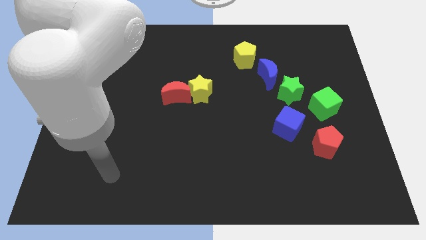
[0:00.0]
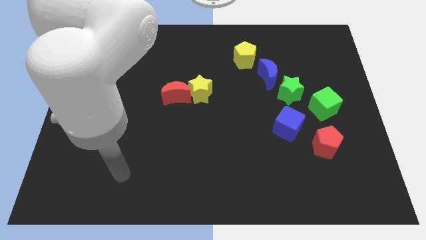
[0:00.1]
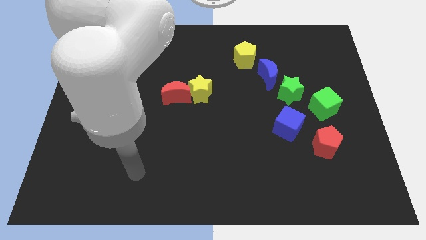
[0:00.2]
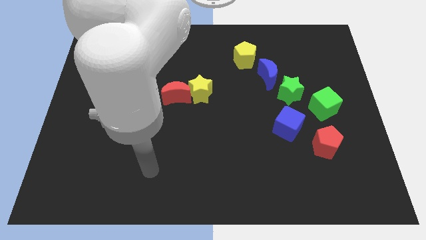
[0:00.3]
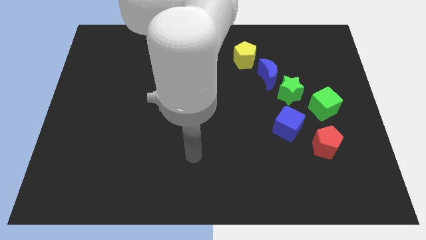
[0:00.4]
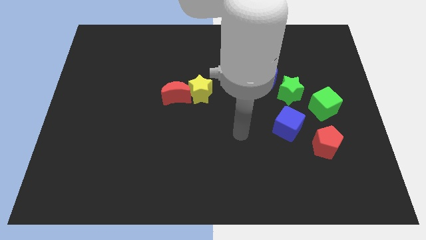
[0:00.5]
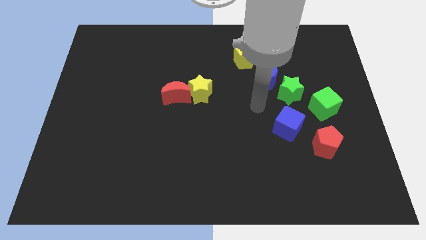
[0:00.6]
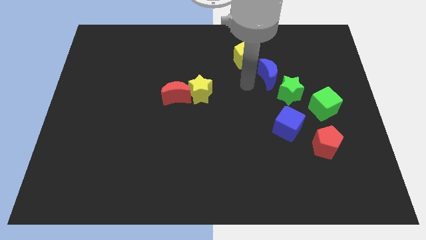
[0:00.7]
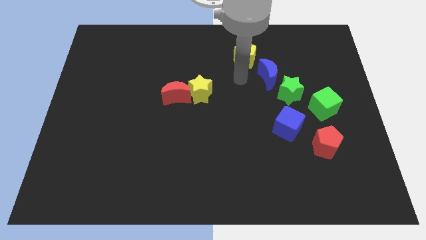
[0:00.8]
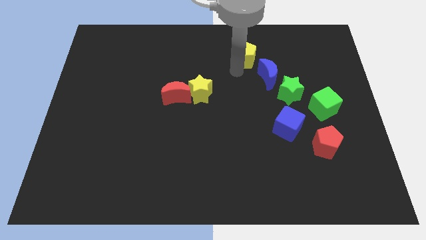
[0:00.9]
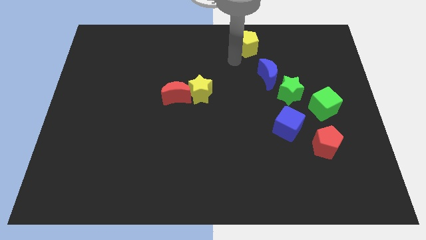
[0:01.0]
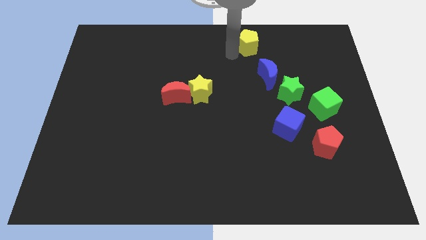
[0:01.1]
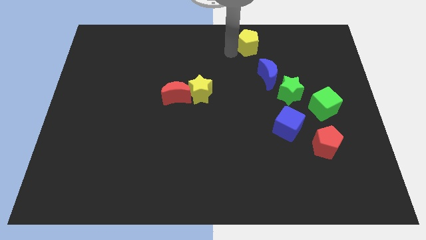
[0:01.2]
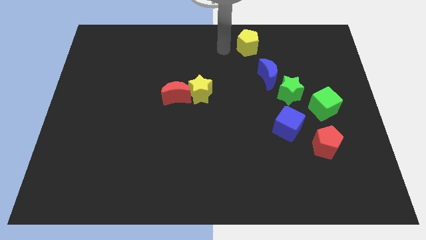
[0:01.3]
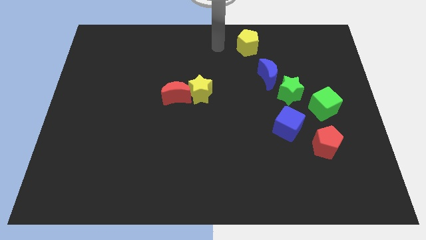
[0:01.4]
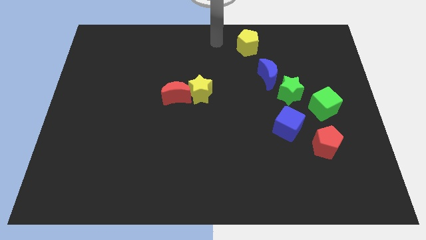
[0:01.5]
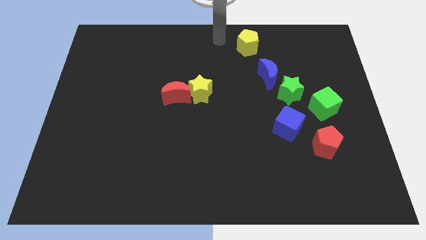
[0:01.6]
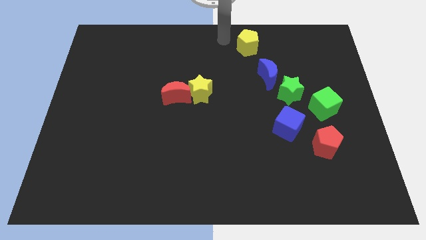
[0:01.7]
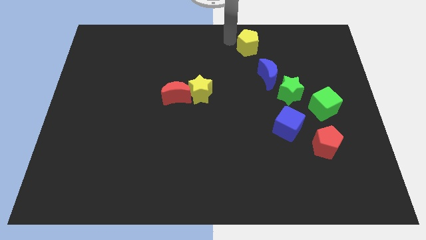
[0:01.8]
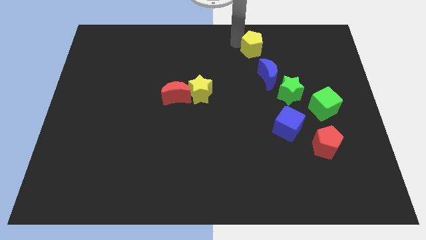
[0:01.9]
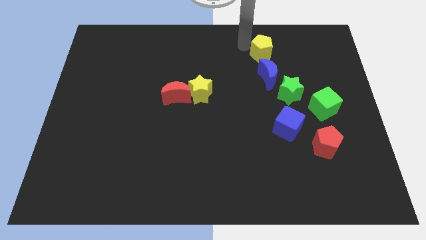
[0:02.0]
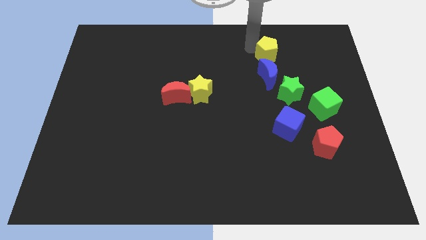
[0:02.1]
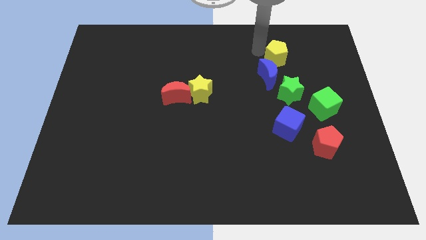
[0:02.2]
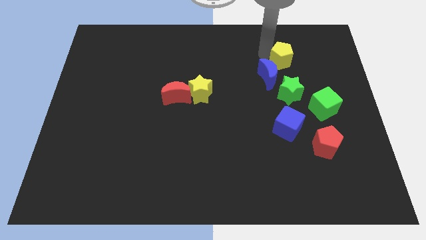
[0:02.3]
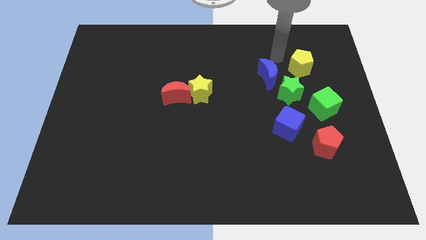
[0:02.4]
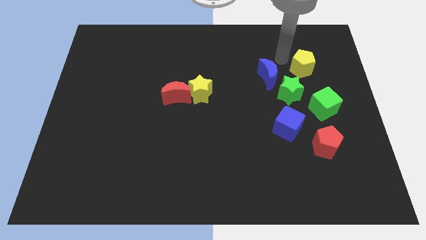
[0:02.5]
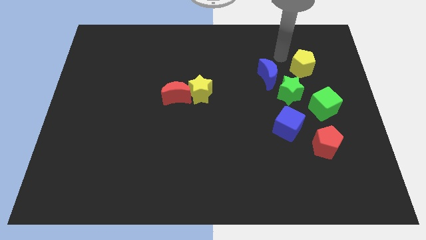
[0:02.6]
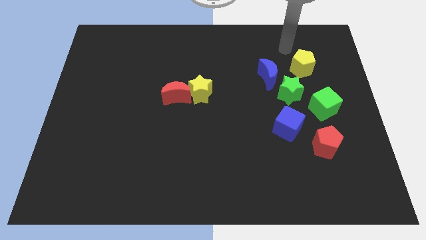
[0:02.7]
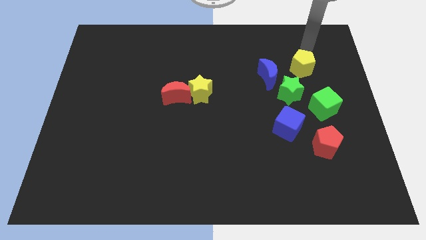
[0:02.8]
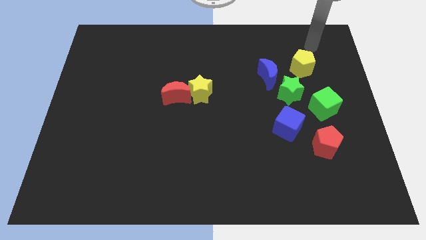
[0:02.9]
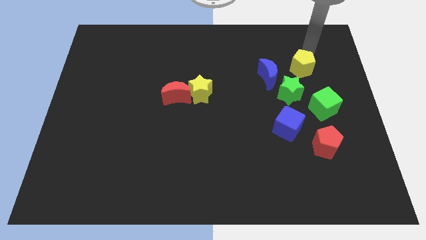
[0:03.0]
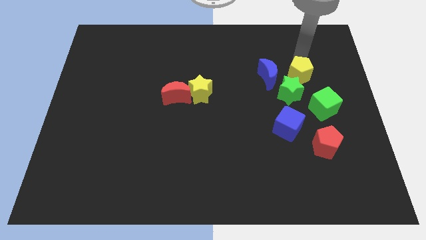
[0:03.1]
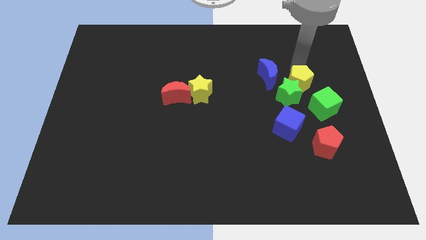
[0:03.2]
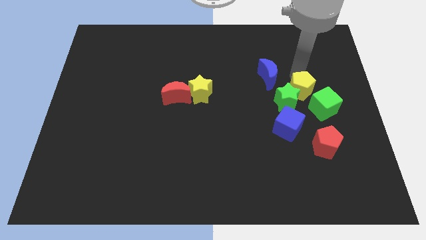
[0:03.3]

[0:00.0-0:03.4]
push the yellow pentagon towards the green star

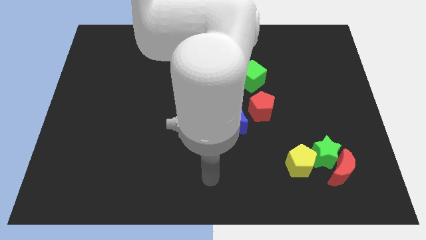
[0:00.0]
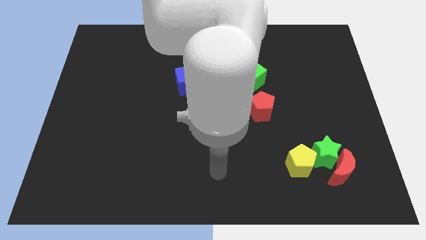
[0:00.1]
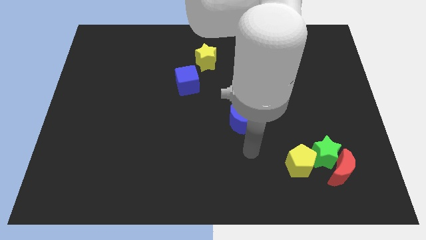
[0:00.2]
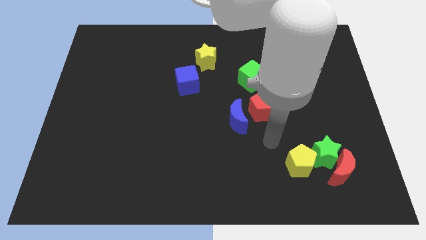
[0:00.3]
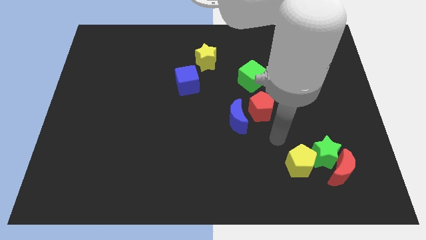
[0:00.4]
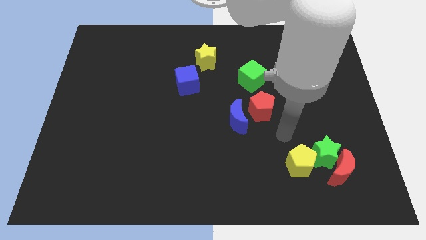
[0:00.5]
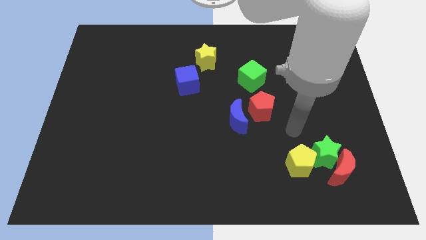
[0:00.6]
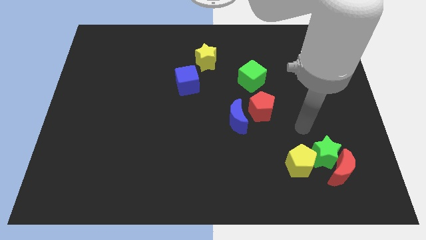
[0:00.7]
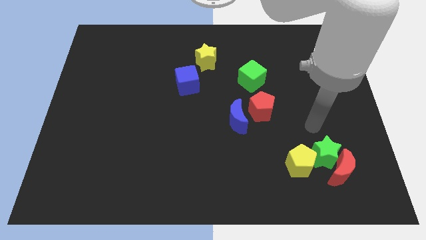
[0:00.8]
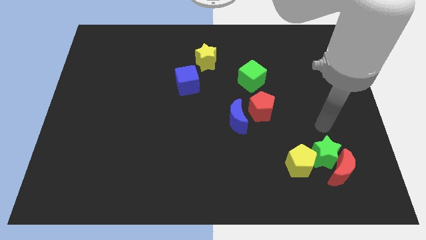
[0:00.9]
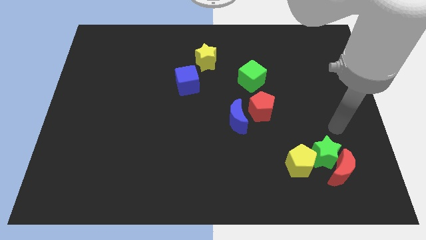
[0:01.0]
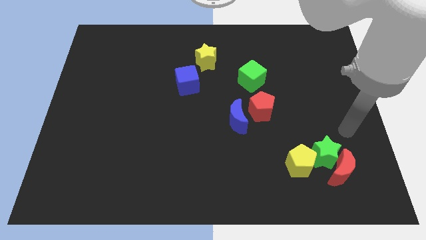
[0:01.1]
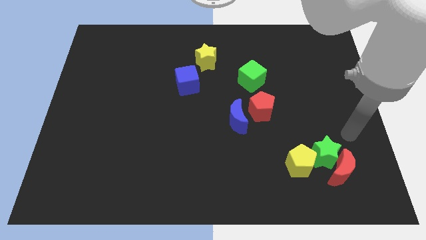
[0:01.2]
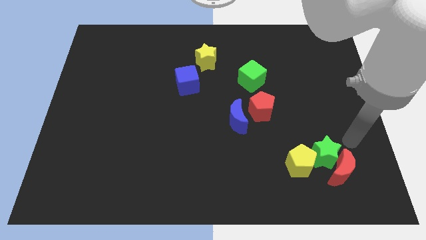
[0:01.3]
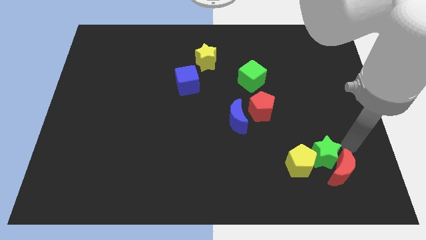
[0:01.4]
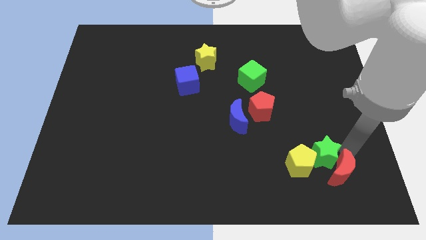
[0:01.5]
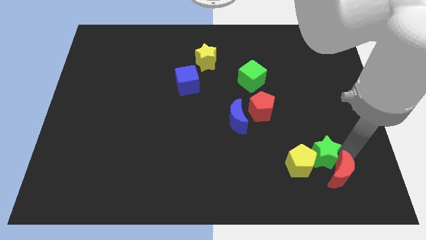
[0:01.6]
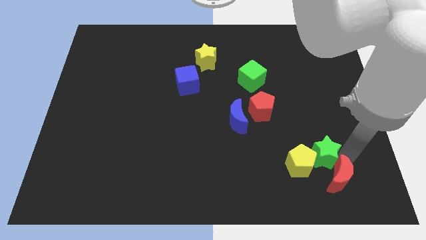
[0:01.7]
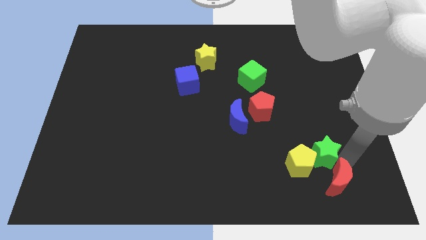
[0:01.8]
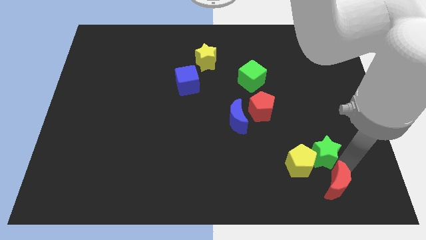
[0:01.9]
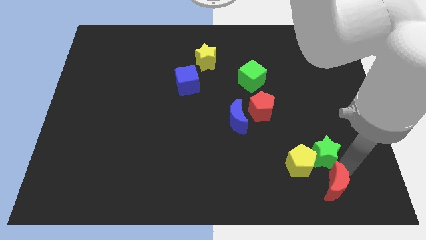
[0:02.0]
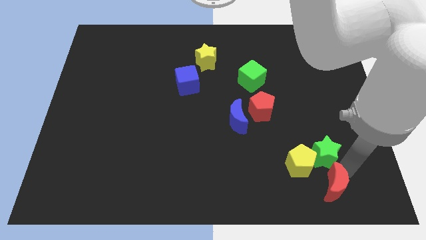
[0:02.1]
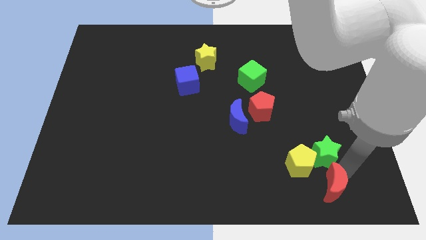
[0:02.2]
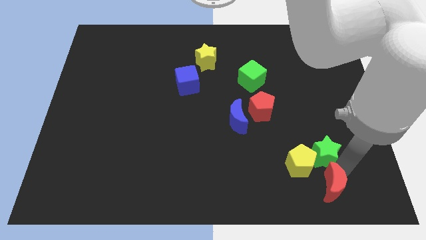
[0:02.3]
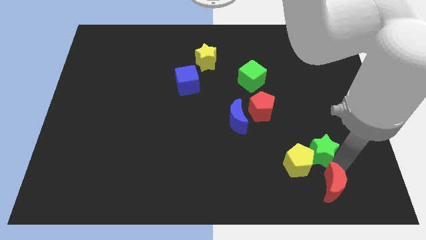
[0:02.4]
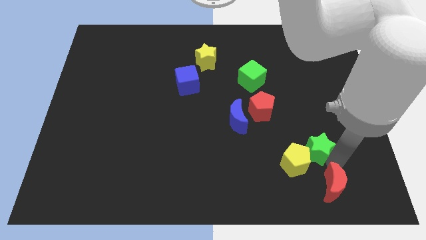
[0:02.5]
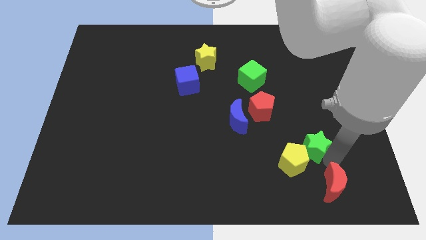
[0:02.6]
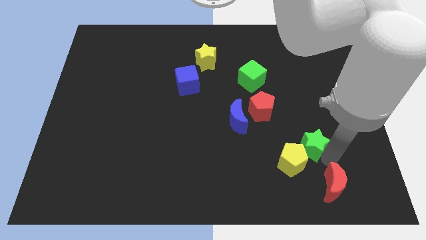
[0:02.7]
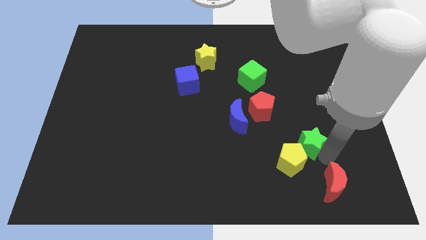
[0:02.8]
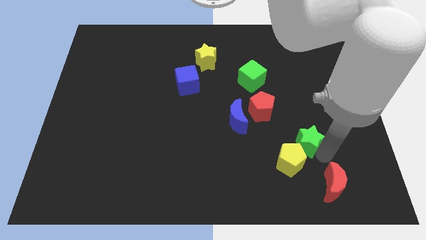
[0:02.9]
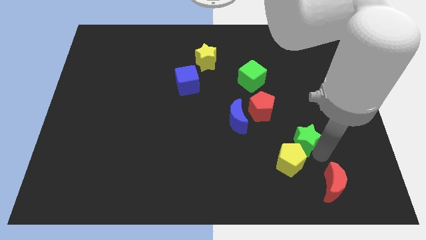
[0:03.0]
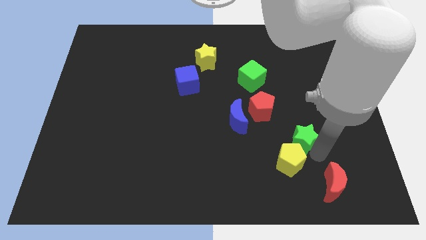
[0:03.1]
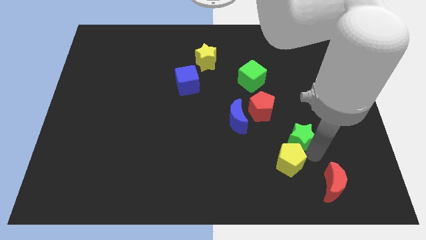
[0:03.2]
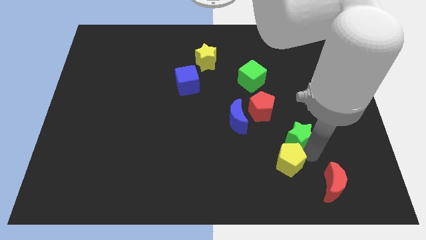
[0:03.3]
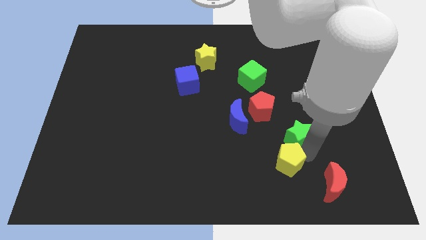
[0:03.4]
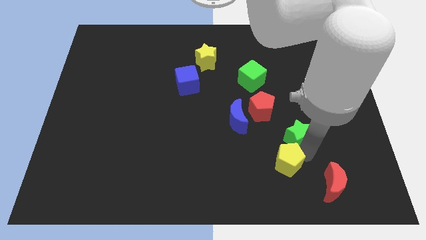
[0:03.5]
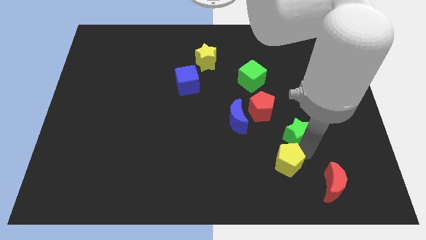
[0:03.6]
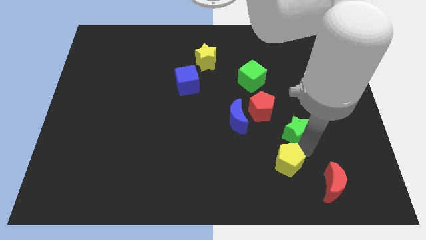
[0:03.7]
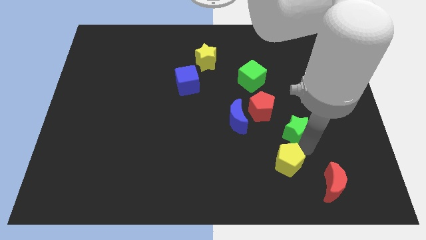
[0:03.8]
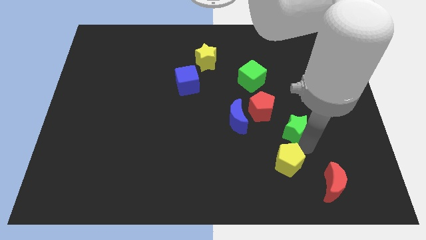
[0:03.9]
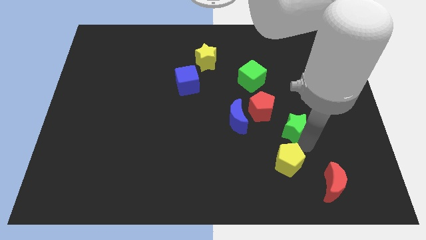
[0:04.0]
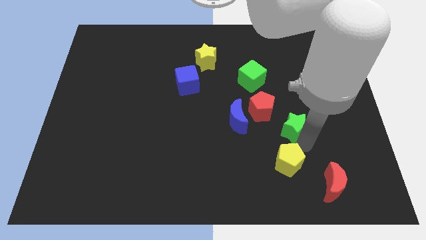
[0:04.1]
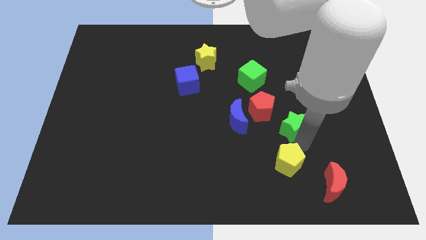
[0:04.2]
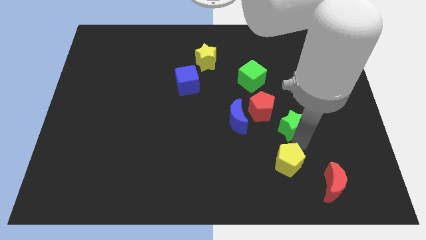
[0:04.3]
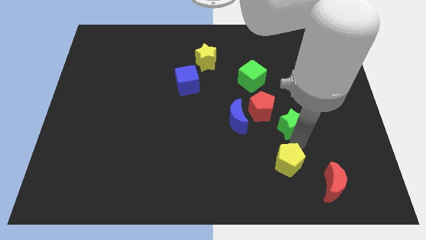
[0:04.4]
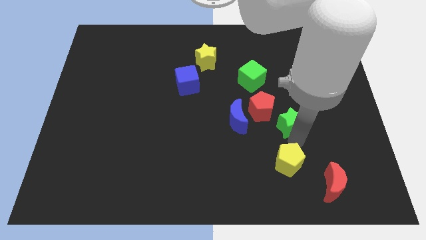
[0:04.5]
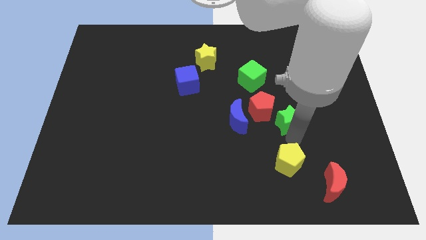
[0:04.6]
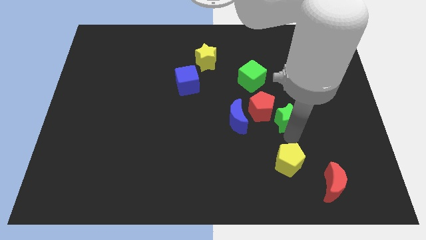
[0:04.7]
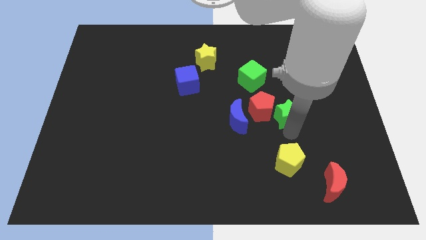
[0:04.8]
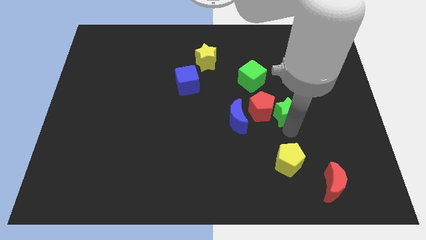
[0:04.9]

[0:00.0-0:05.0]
move the green star next to the red pentagon
